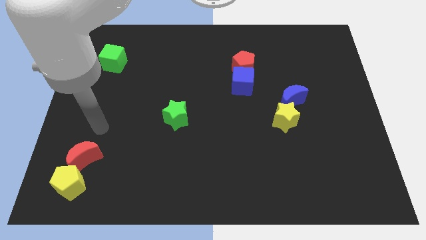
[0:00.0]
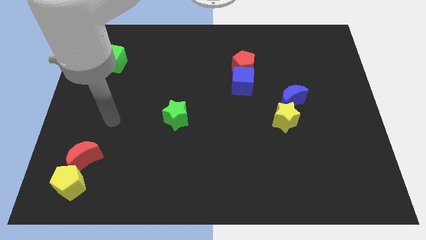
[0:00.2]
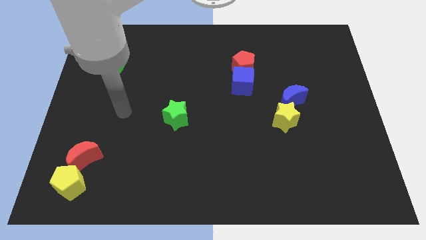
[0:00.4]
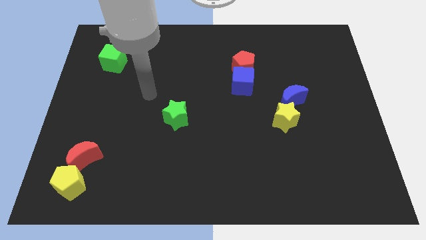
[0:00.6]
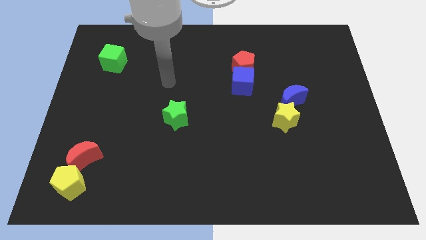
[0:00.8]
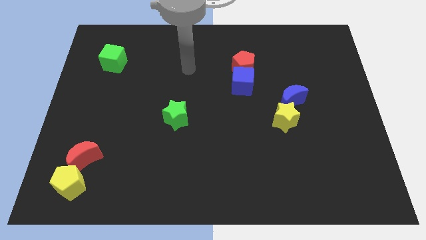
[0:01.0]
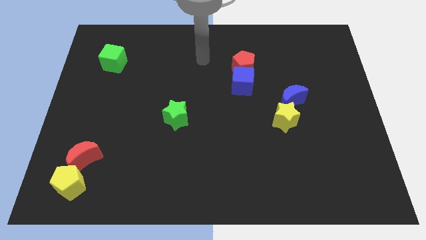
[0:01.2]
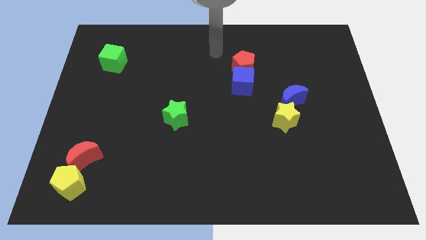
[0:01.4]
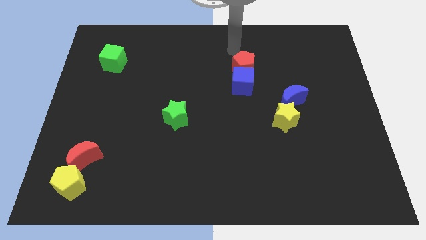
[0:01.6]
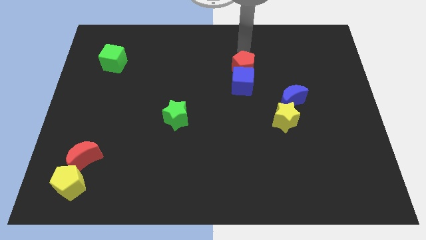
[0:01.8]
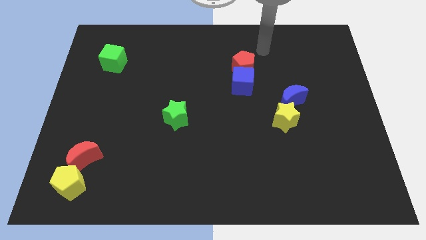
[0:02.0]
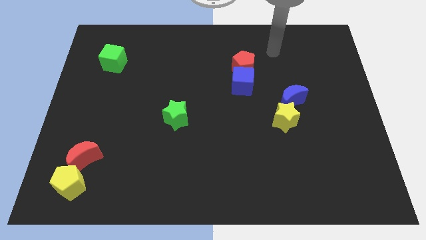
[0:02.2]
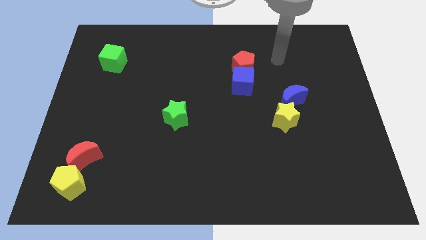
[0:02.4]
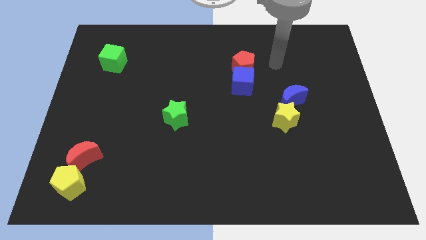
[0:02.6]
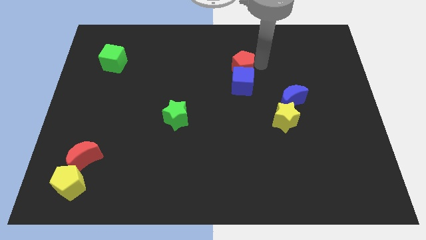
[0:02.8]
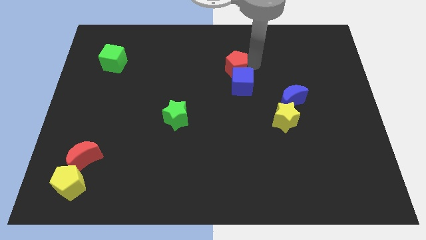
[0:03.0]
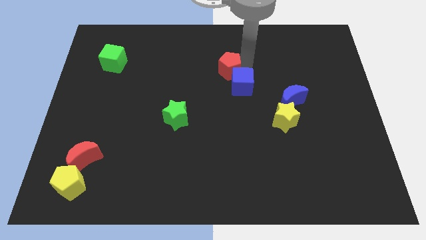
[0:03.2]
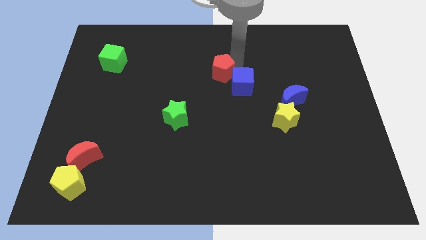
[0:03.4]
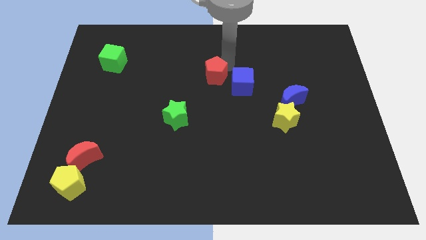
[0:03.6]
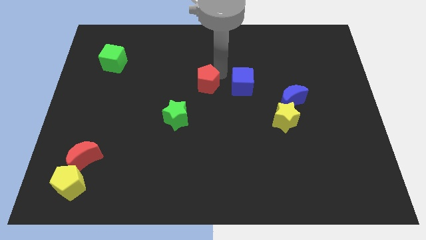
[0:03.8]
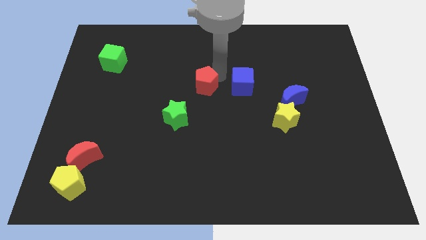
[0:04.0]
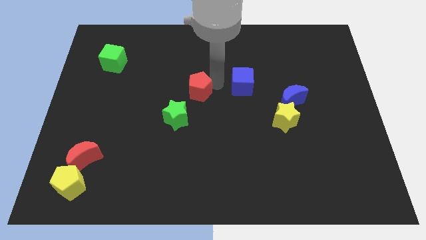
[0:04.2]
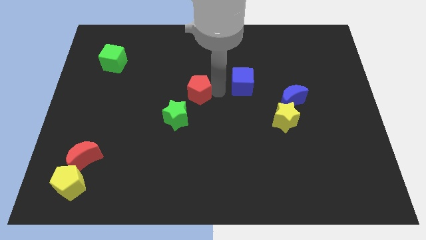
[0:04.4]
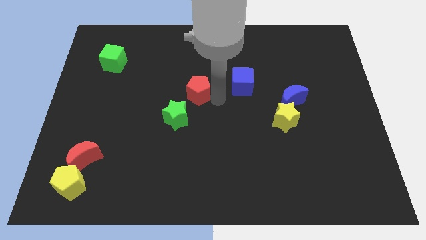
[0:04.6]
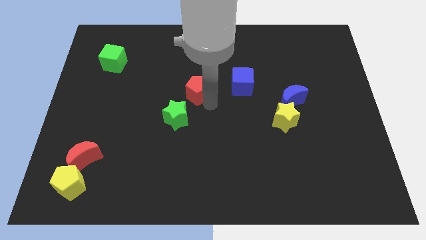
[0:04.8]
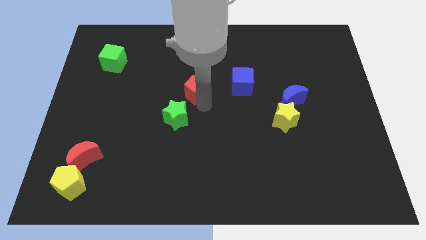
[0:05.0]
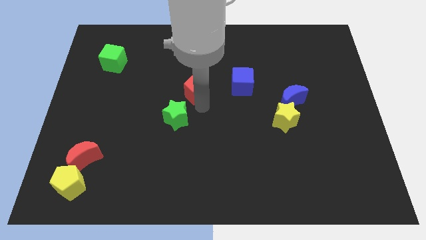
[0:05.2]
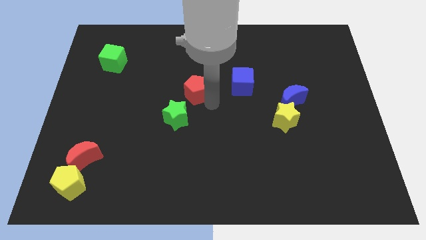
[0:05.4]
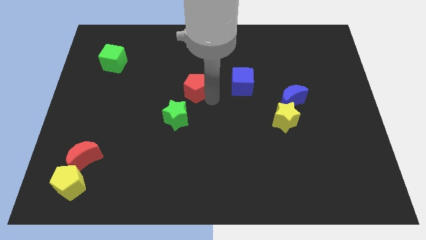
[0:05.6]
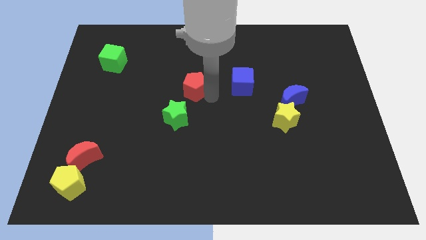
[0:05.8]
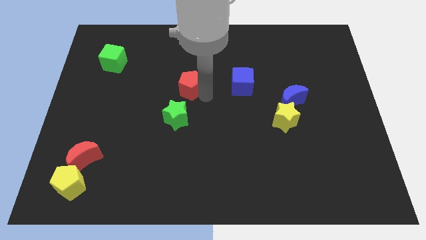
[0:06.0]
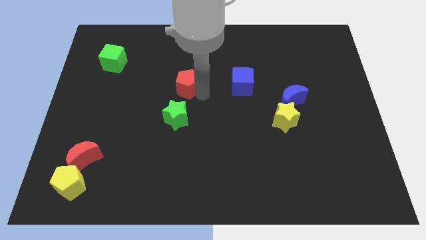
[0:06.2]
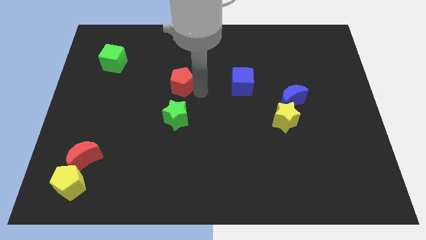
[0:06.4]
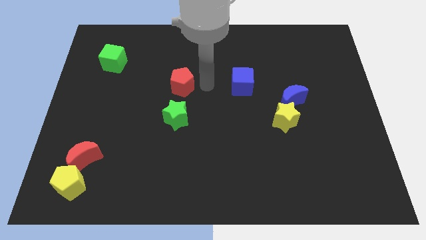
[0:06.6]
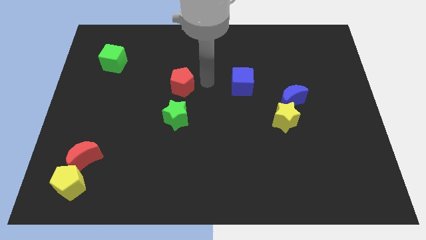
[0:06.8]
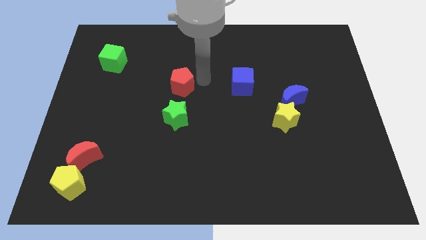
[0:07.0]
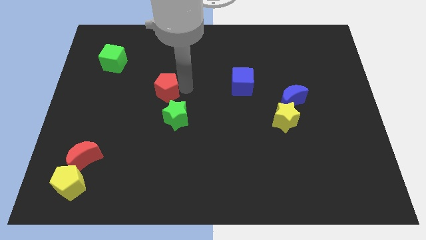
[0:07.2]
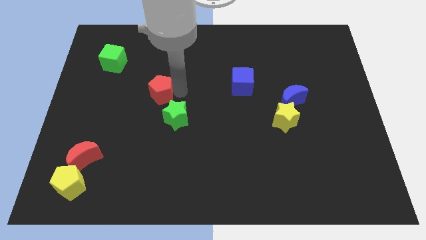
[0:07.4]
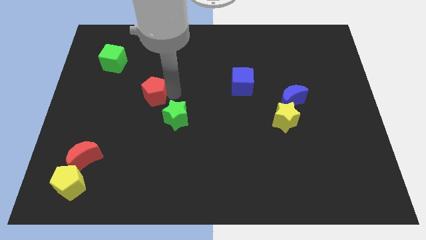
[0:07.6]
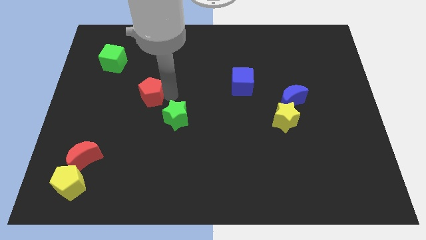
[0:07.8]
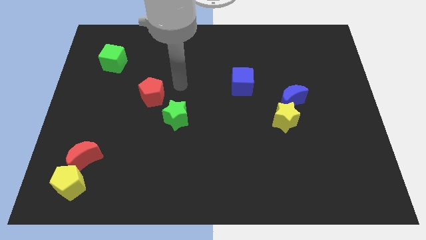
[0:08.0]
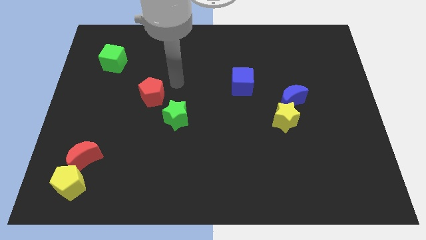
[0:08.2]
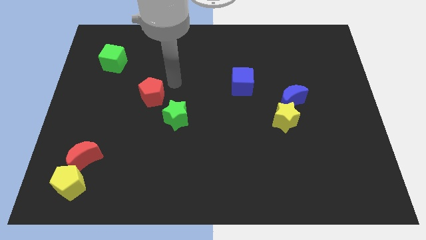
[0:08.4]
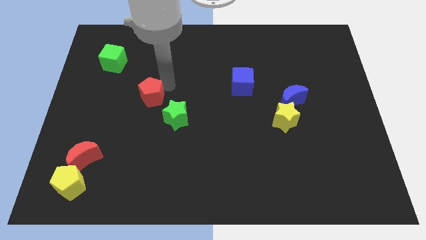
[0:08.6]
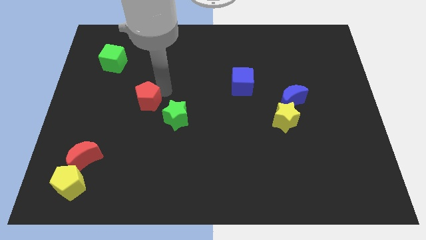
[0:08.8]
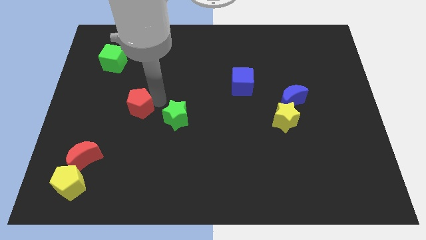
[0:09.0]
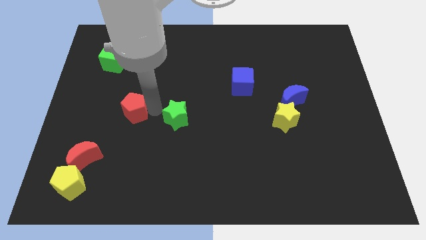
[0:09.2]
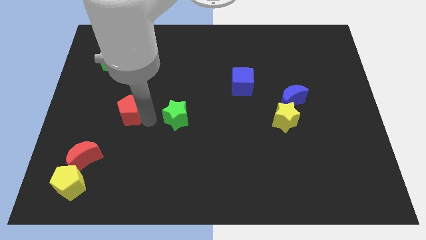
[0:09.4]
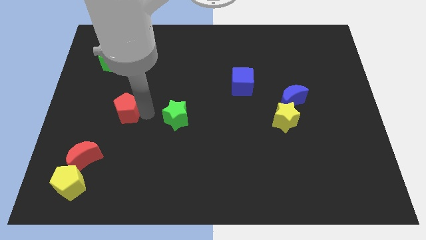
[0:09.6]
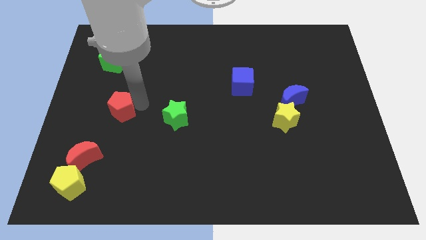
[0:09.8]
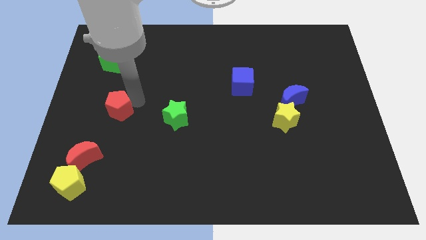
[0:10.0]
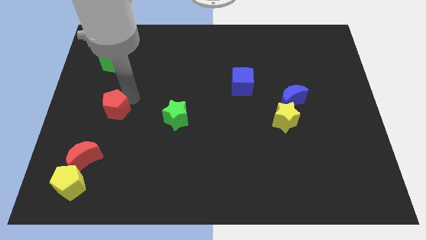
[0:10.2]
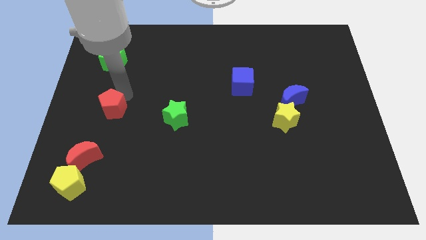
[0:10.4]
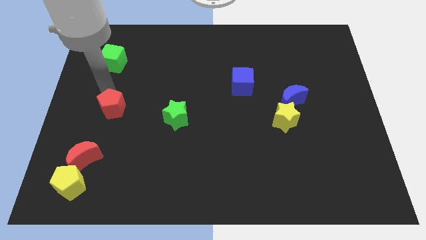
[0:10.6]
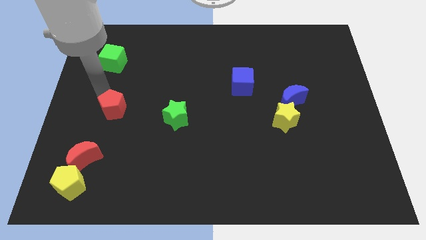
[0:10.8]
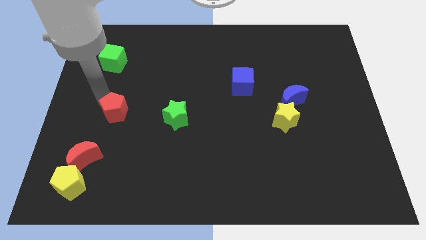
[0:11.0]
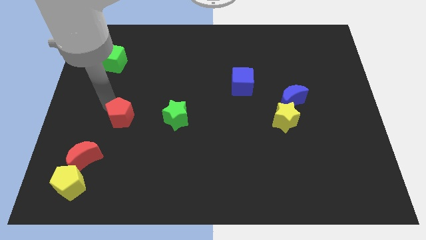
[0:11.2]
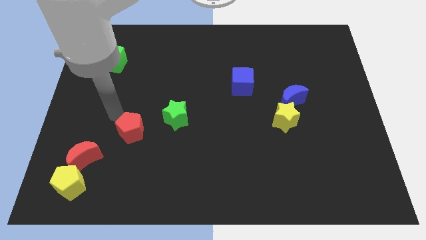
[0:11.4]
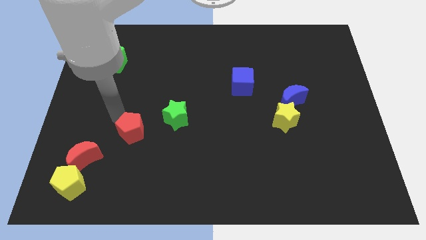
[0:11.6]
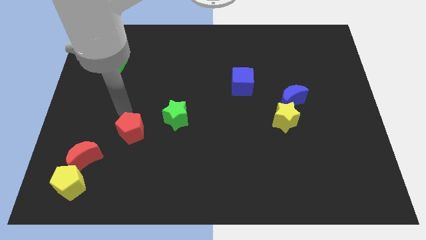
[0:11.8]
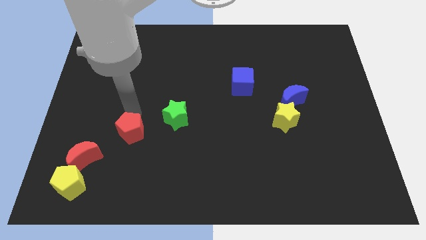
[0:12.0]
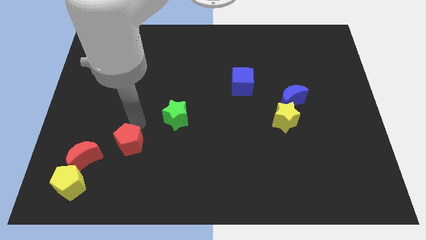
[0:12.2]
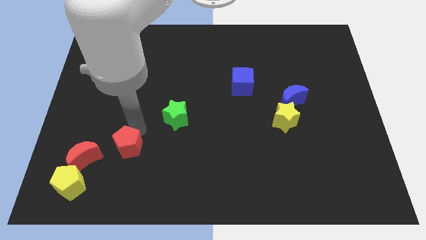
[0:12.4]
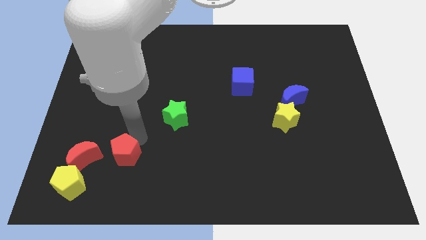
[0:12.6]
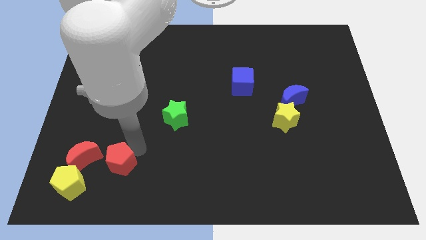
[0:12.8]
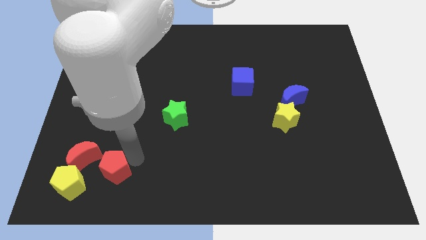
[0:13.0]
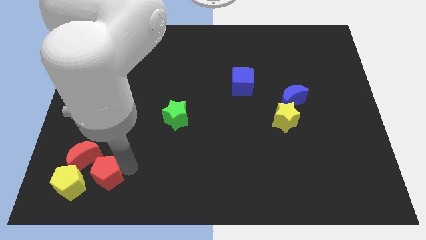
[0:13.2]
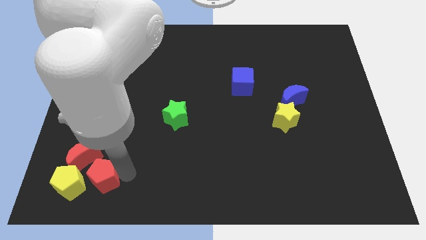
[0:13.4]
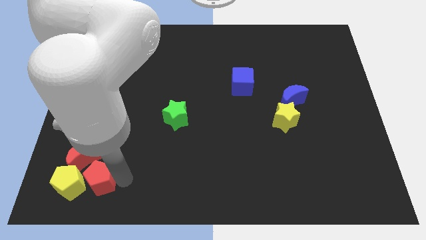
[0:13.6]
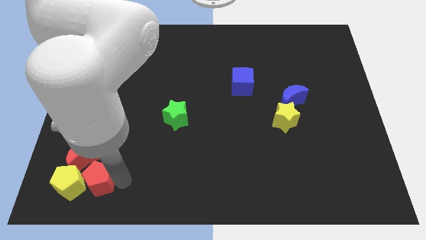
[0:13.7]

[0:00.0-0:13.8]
push the red pentagon to the yellow pentagon

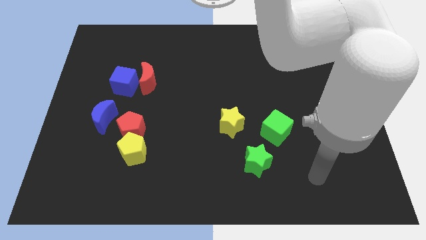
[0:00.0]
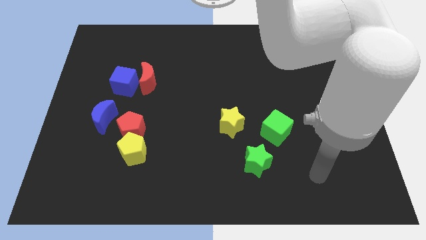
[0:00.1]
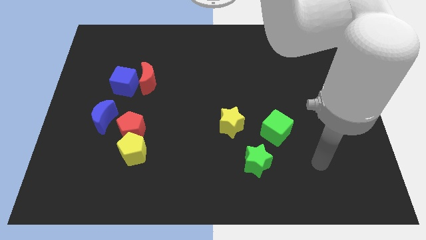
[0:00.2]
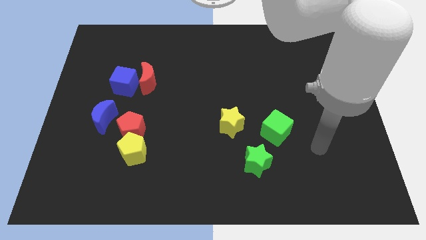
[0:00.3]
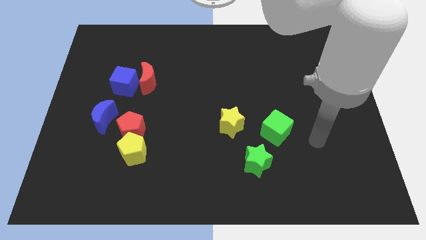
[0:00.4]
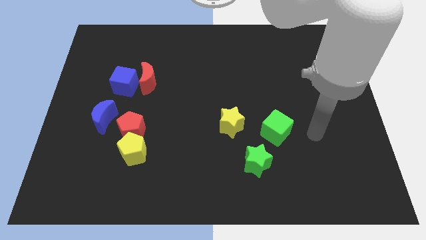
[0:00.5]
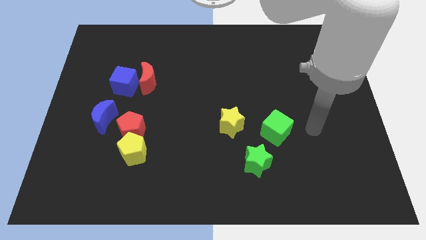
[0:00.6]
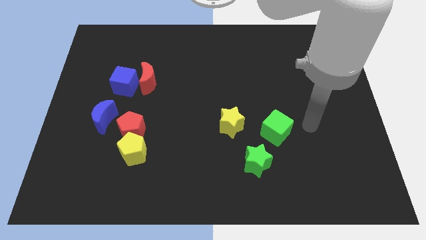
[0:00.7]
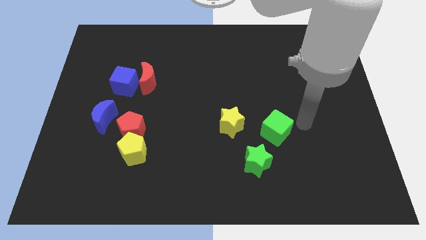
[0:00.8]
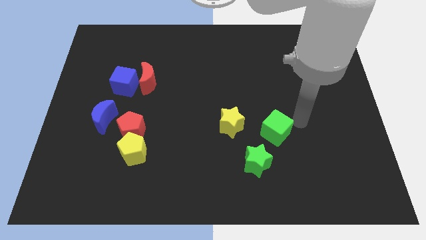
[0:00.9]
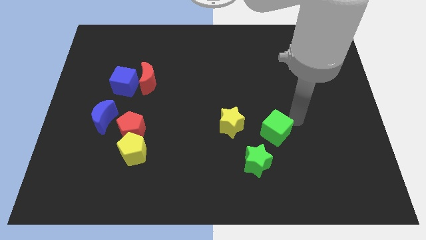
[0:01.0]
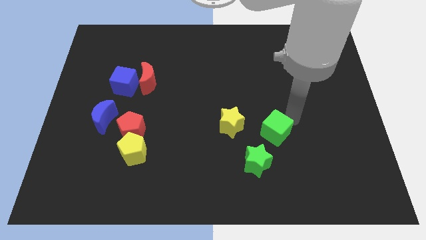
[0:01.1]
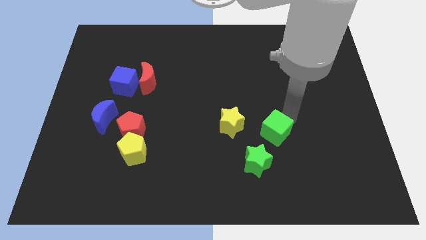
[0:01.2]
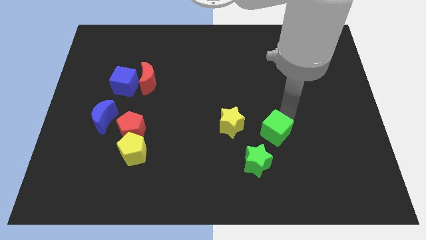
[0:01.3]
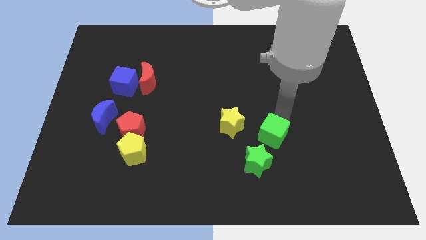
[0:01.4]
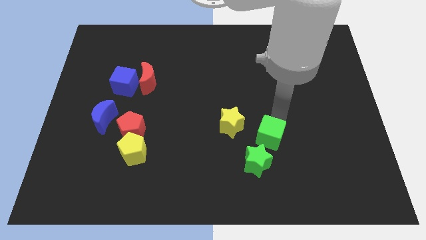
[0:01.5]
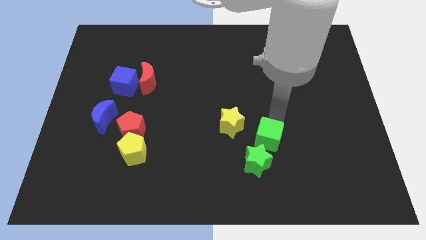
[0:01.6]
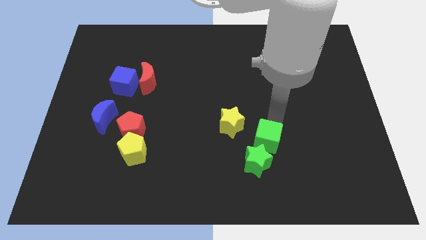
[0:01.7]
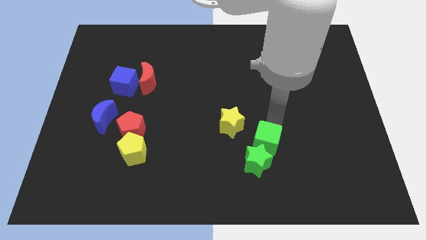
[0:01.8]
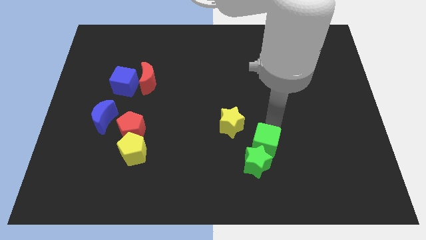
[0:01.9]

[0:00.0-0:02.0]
push the green cube close to the green star
